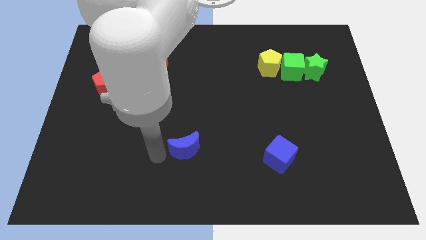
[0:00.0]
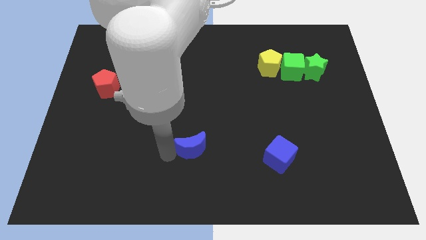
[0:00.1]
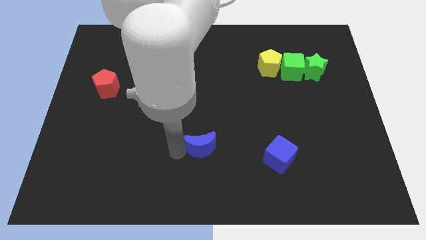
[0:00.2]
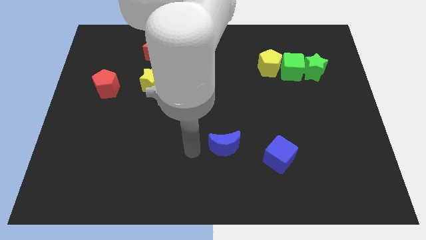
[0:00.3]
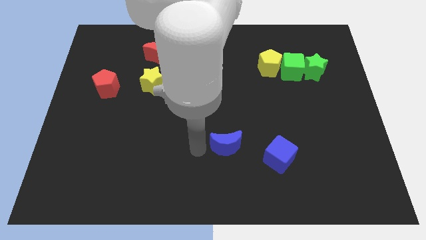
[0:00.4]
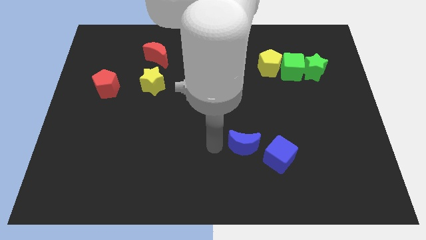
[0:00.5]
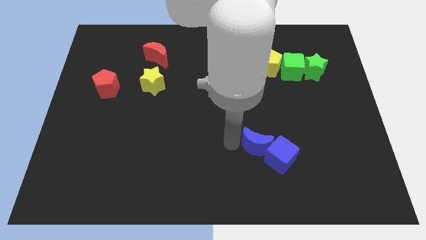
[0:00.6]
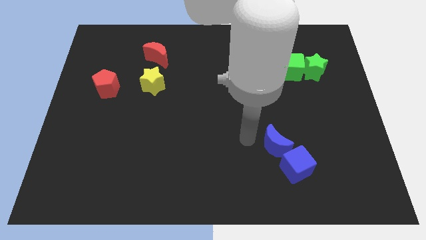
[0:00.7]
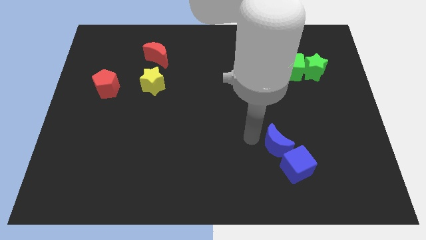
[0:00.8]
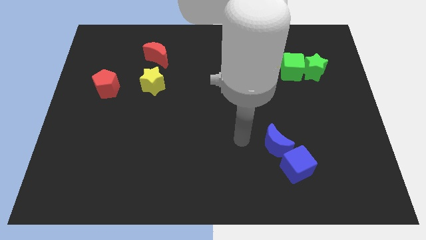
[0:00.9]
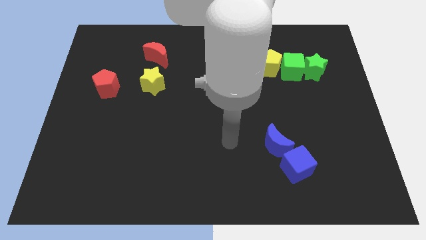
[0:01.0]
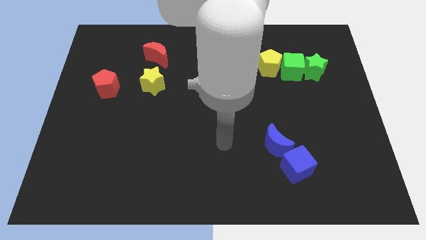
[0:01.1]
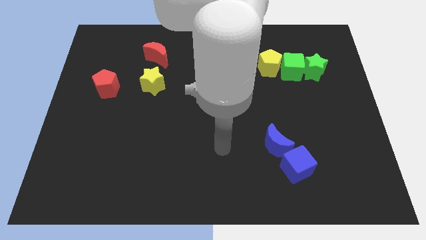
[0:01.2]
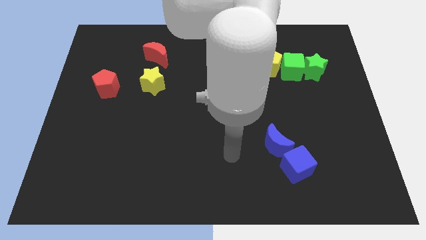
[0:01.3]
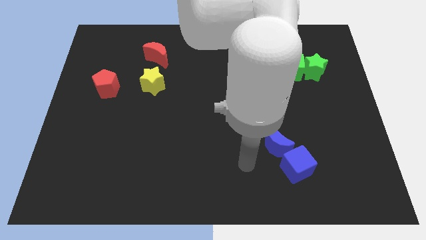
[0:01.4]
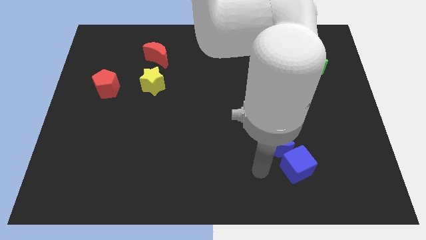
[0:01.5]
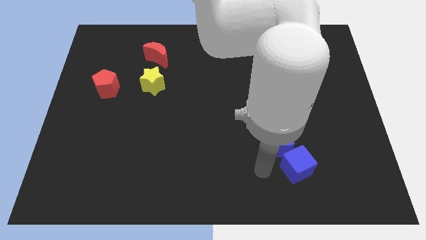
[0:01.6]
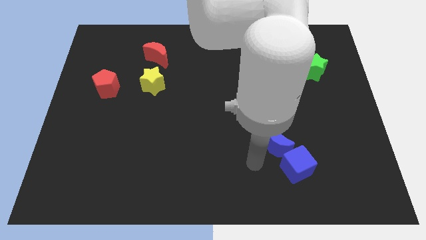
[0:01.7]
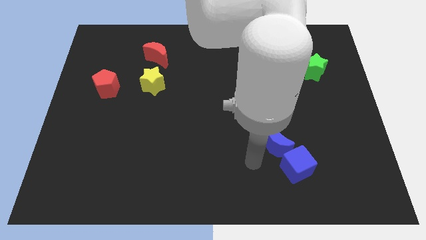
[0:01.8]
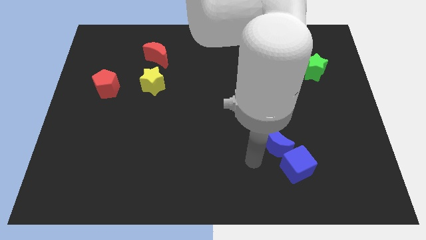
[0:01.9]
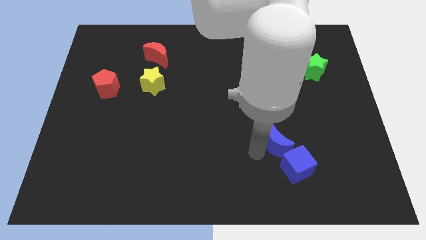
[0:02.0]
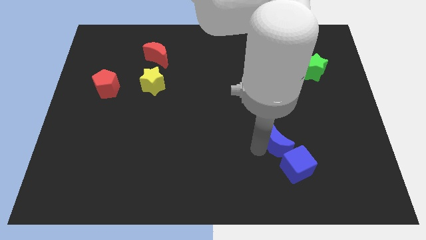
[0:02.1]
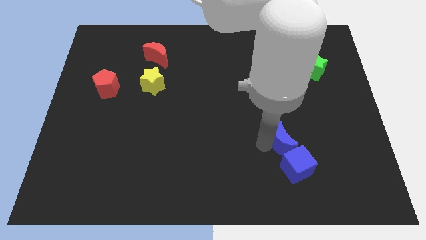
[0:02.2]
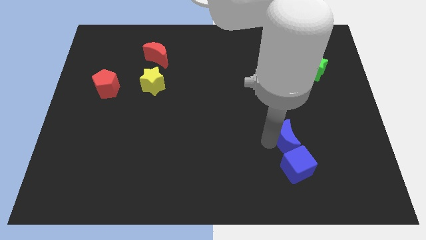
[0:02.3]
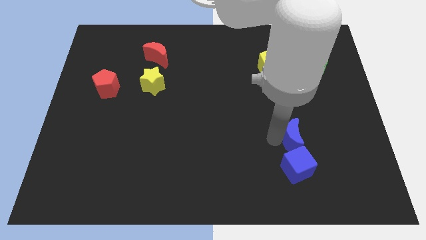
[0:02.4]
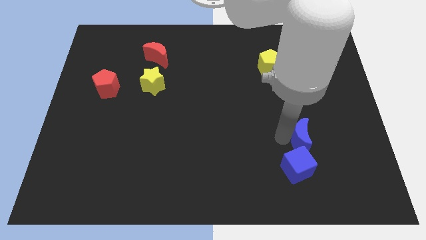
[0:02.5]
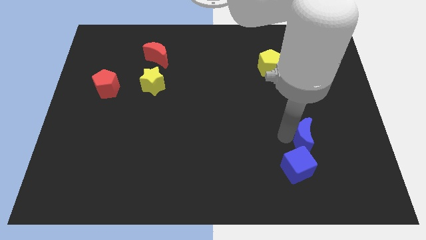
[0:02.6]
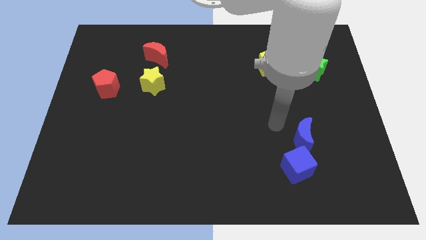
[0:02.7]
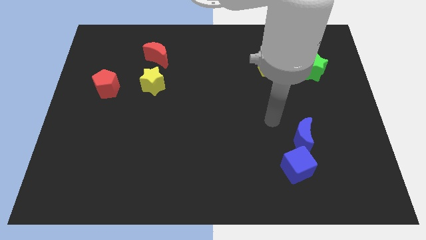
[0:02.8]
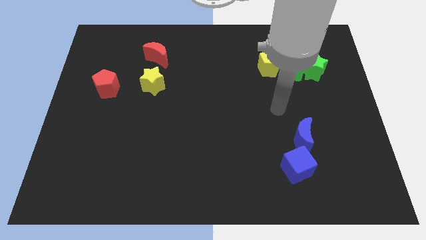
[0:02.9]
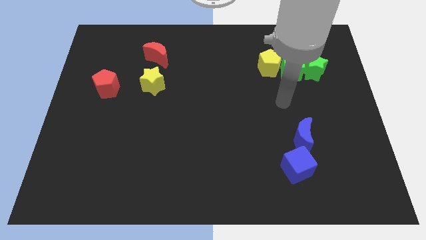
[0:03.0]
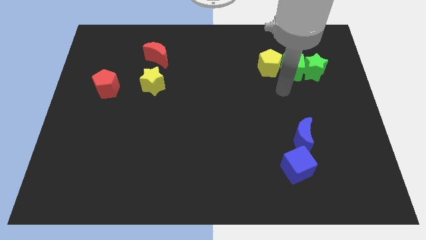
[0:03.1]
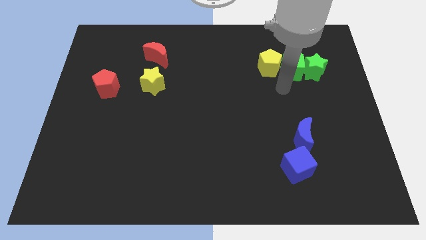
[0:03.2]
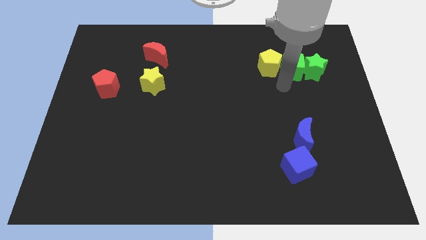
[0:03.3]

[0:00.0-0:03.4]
place the blue crescent to the top of the blue cube

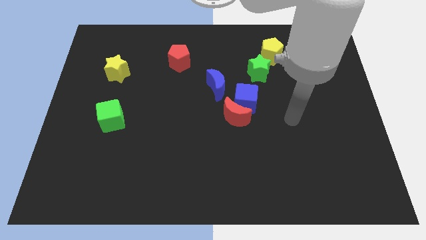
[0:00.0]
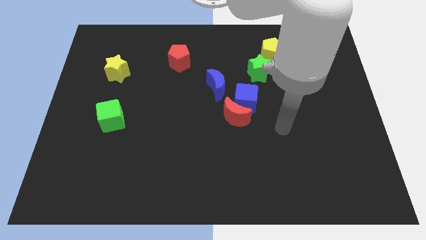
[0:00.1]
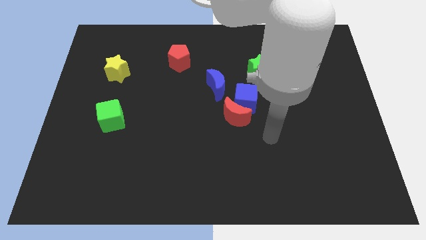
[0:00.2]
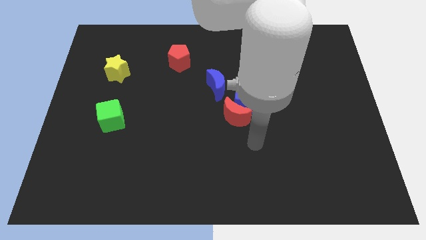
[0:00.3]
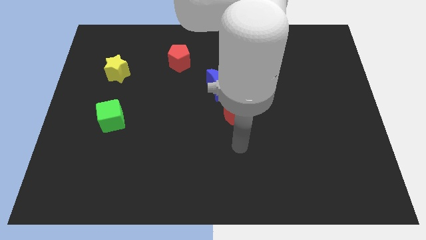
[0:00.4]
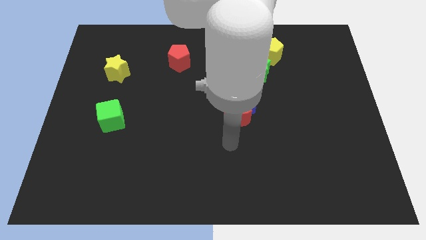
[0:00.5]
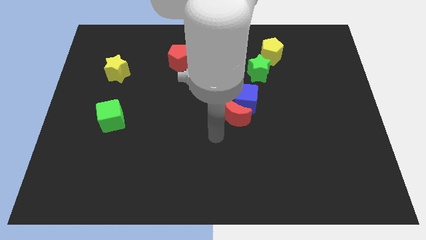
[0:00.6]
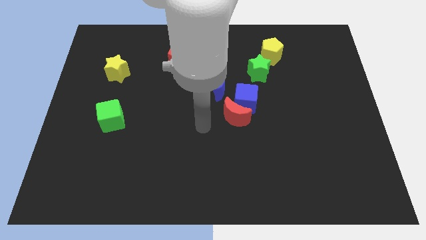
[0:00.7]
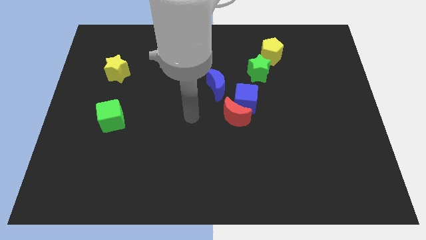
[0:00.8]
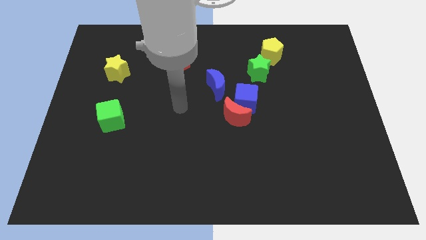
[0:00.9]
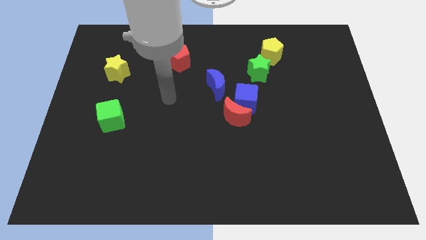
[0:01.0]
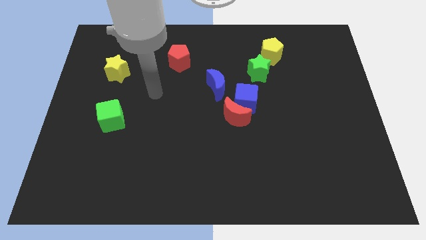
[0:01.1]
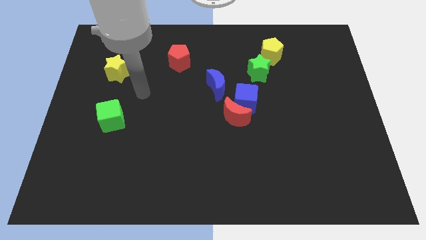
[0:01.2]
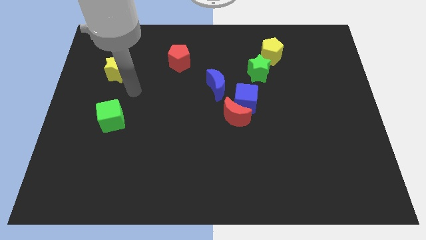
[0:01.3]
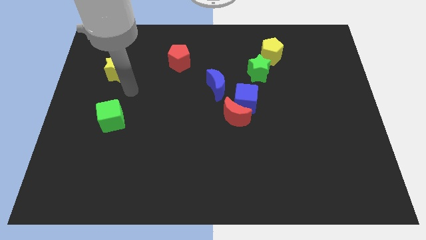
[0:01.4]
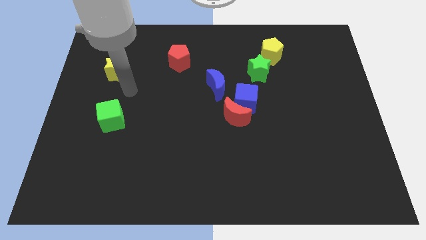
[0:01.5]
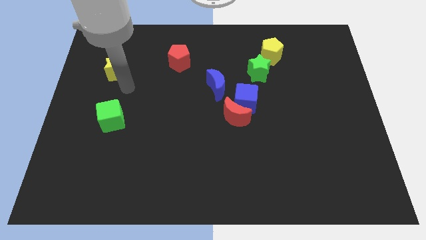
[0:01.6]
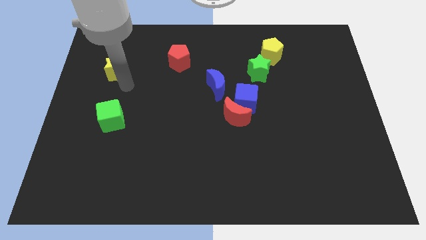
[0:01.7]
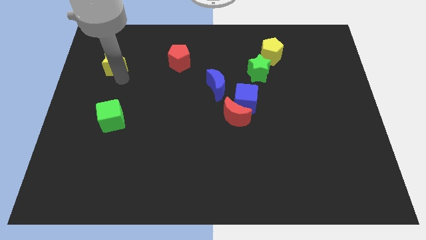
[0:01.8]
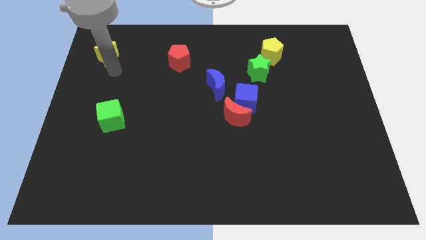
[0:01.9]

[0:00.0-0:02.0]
move the yellow star towards the top left

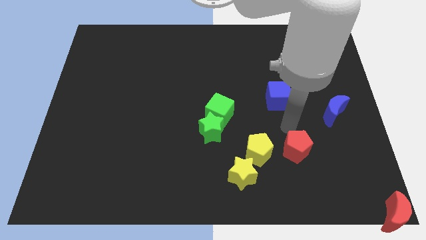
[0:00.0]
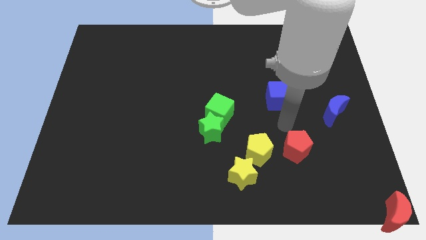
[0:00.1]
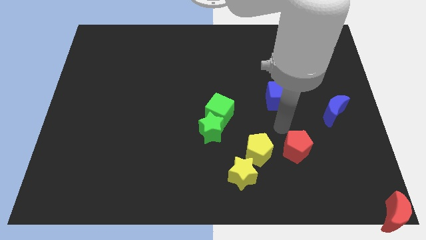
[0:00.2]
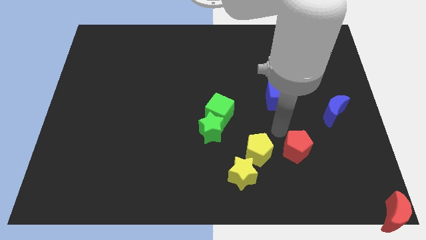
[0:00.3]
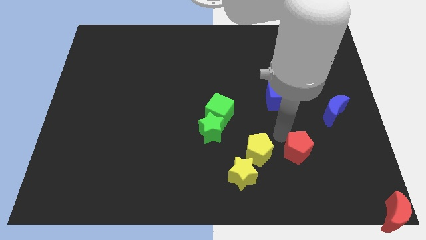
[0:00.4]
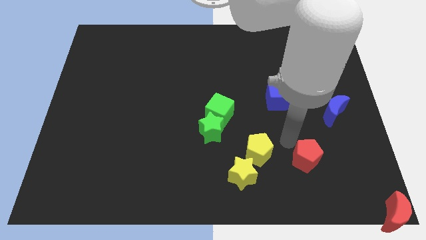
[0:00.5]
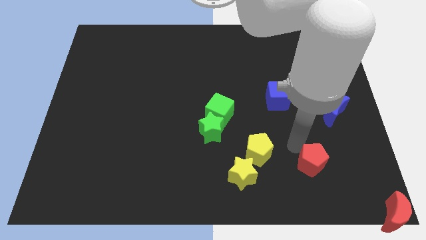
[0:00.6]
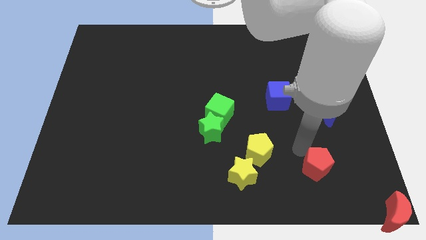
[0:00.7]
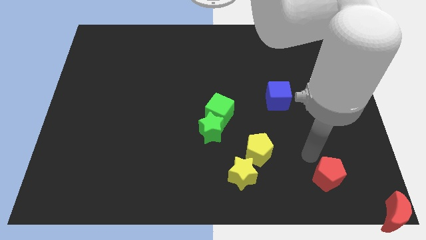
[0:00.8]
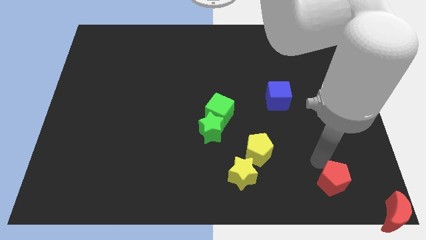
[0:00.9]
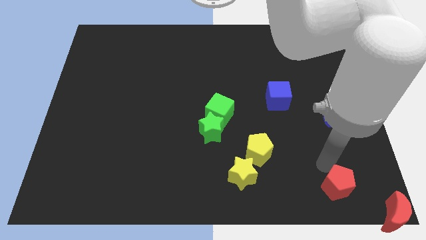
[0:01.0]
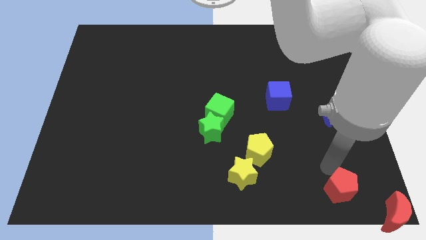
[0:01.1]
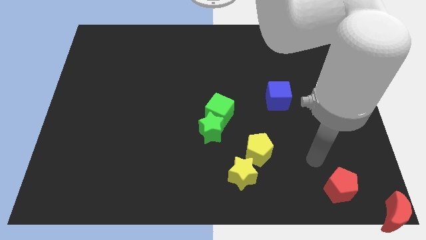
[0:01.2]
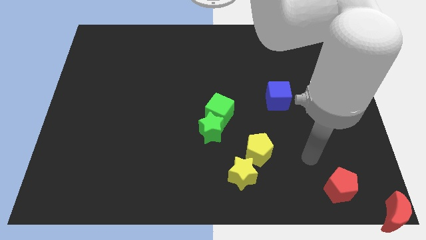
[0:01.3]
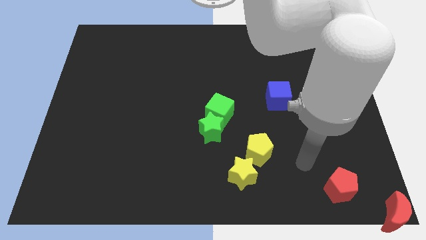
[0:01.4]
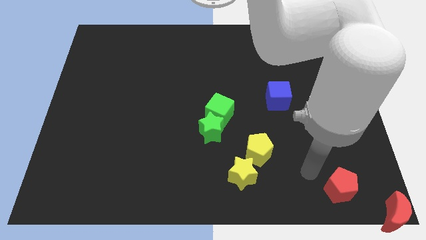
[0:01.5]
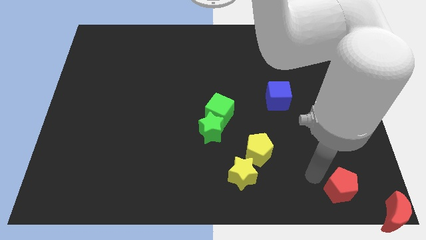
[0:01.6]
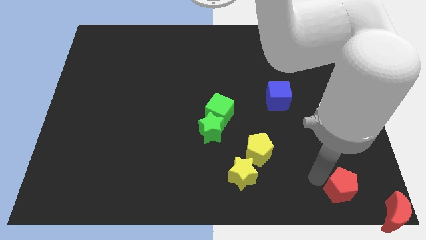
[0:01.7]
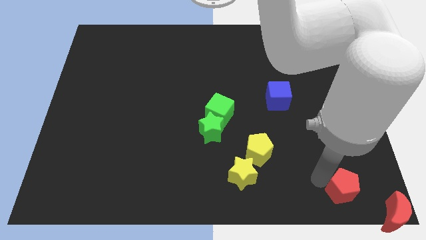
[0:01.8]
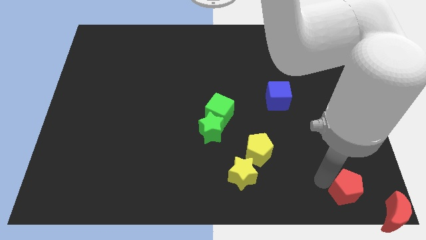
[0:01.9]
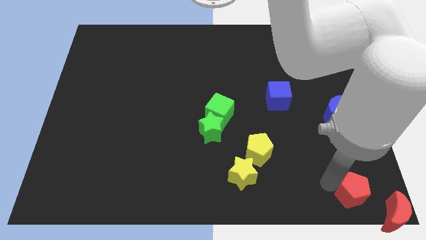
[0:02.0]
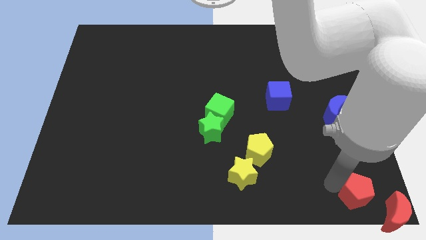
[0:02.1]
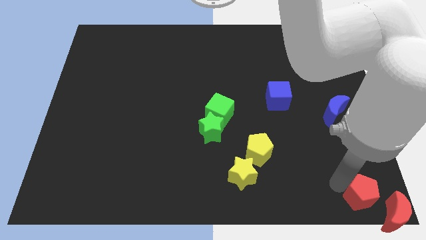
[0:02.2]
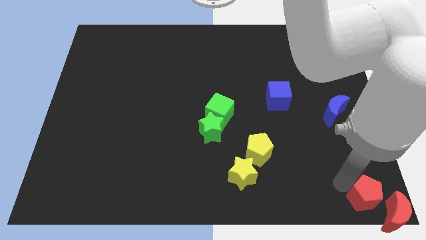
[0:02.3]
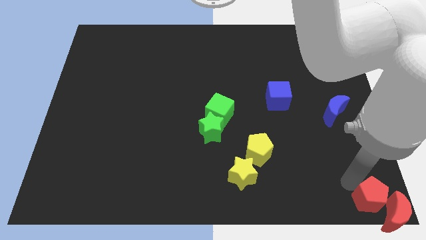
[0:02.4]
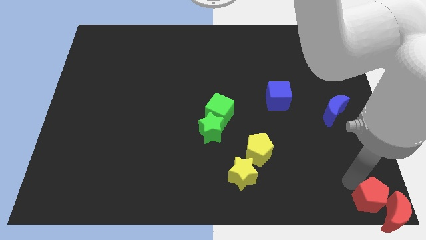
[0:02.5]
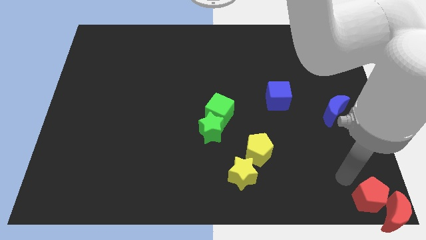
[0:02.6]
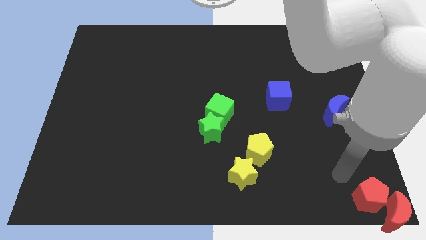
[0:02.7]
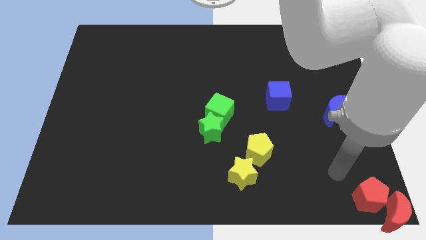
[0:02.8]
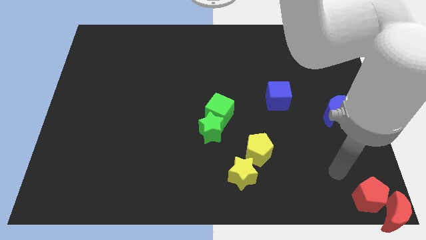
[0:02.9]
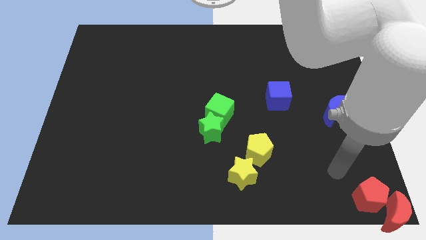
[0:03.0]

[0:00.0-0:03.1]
push red pentagon towards red moon

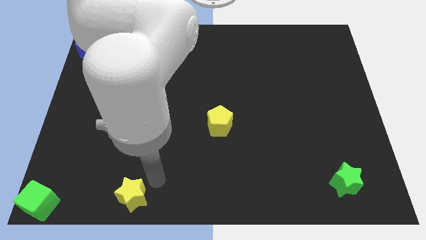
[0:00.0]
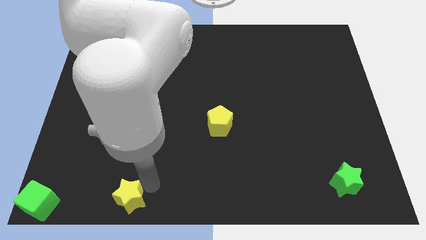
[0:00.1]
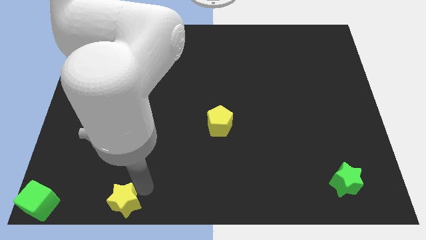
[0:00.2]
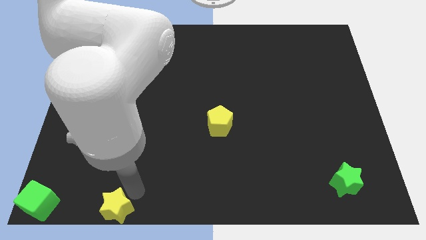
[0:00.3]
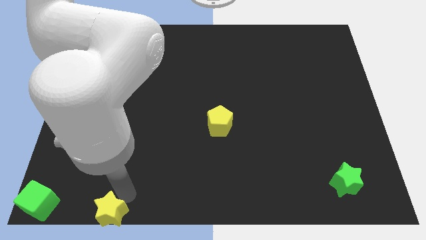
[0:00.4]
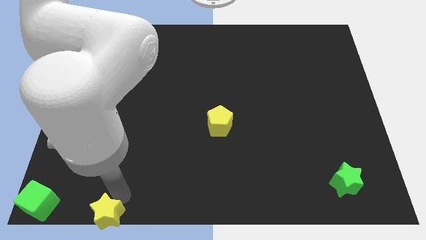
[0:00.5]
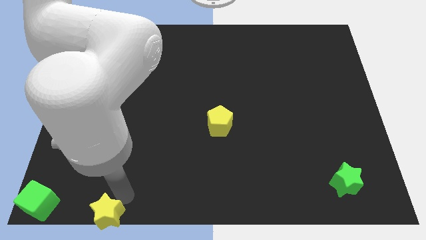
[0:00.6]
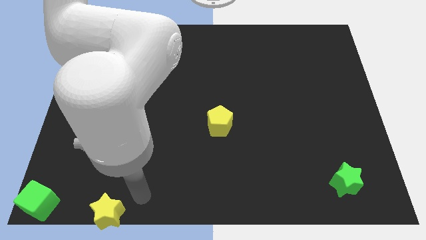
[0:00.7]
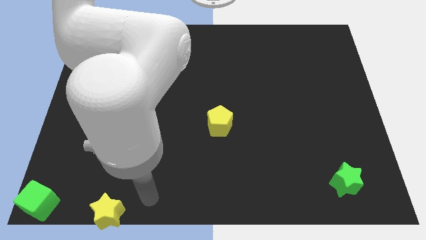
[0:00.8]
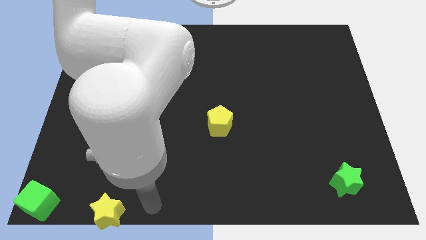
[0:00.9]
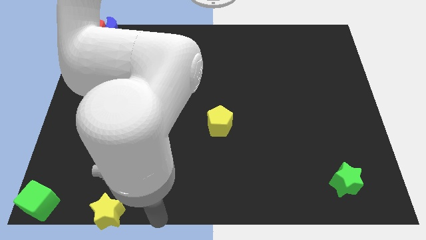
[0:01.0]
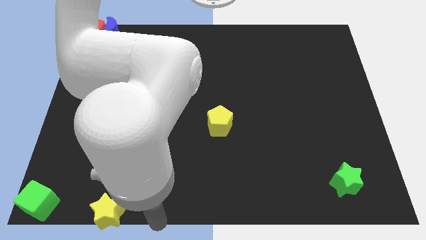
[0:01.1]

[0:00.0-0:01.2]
push the yellow star downwards
